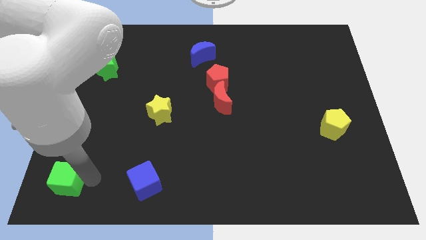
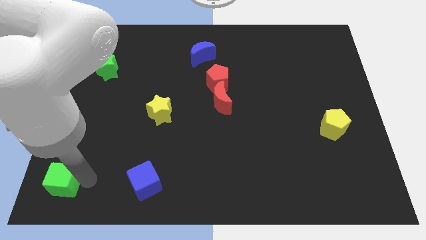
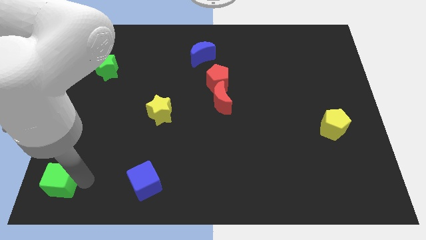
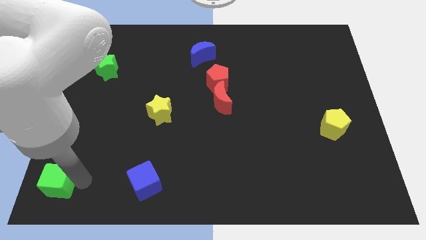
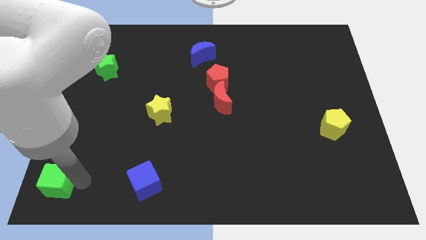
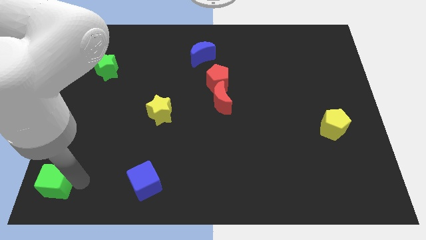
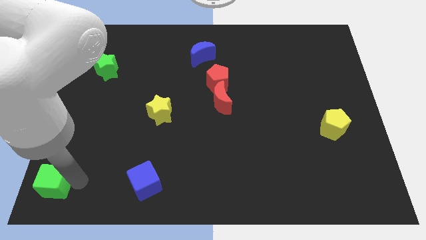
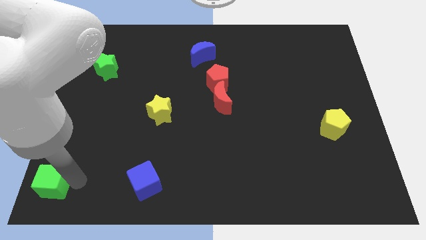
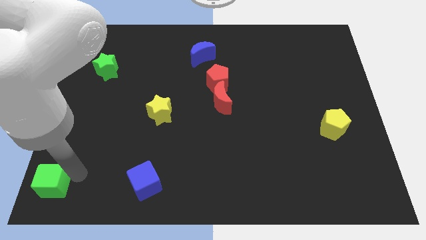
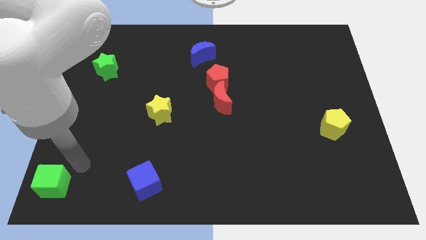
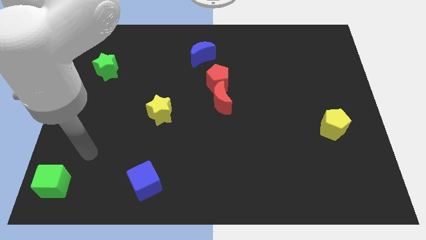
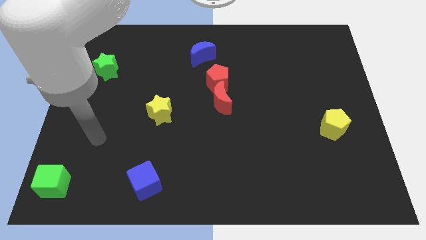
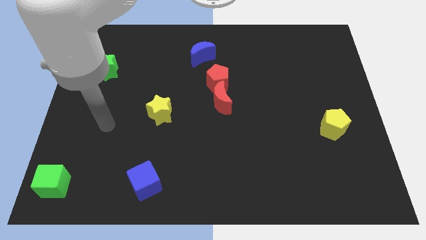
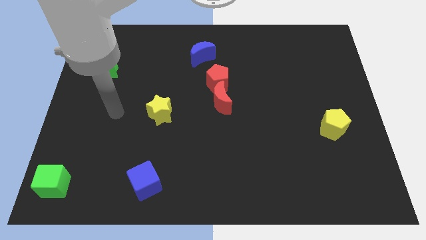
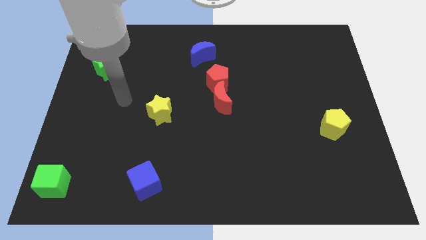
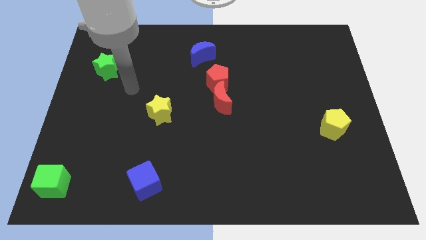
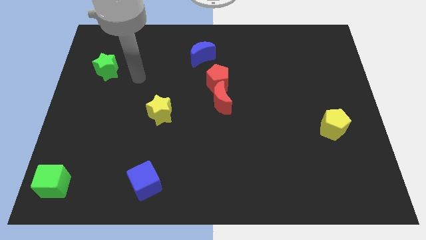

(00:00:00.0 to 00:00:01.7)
push the green cube to the bottom left of the board

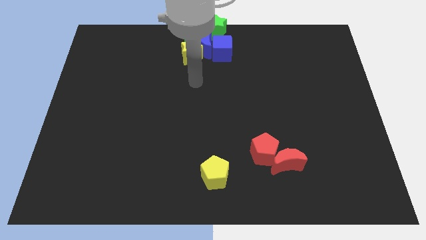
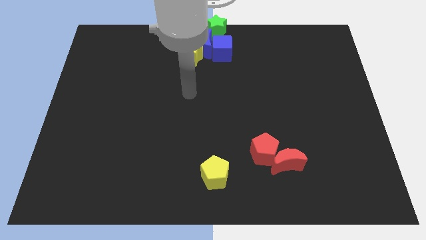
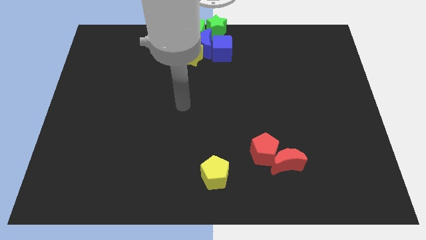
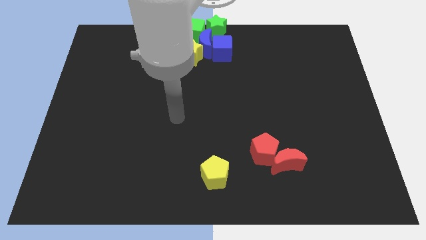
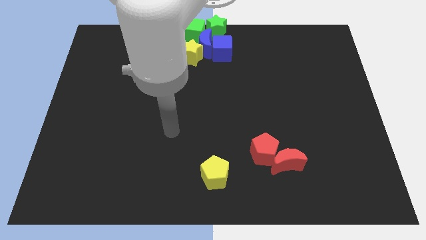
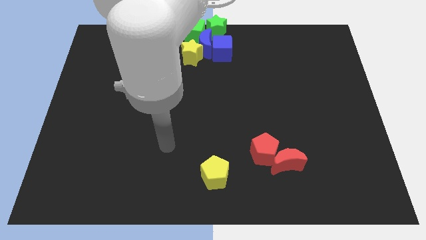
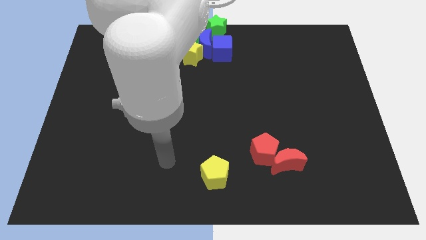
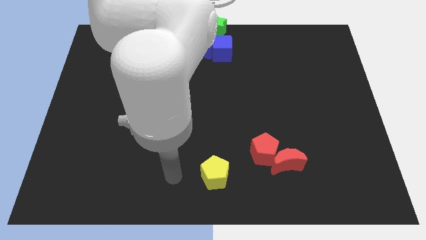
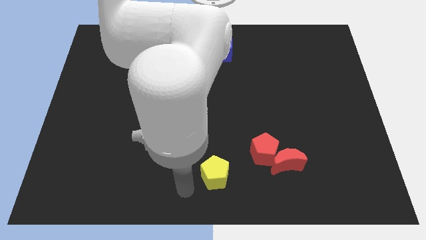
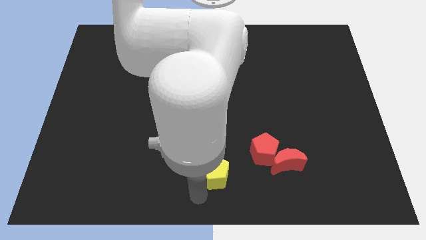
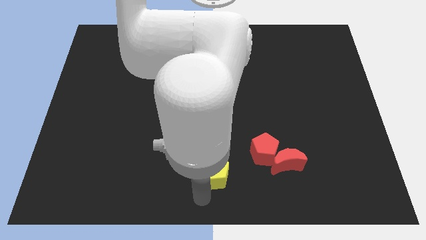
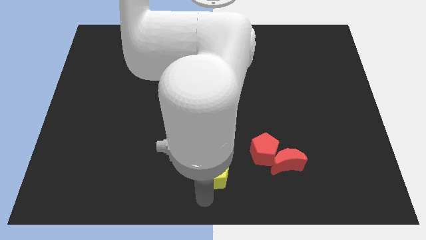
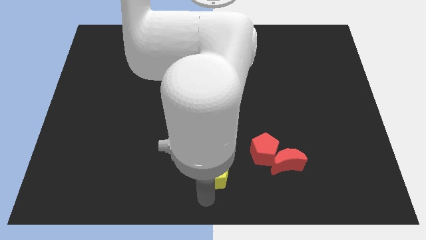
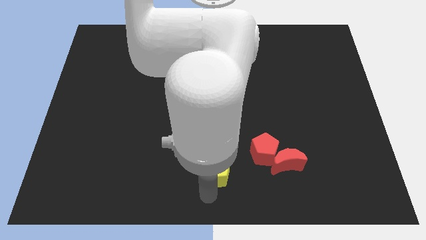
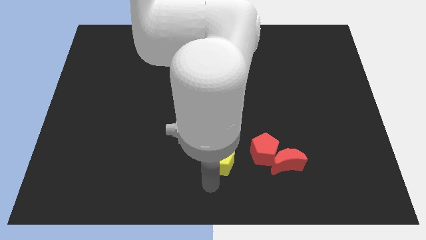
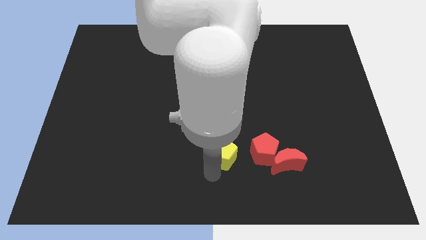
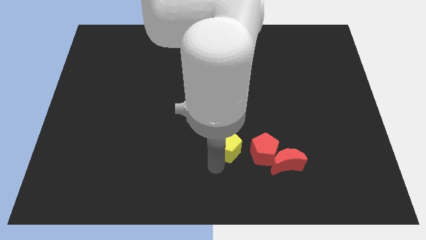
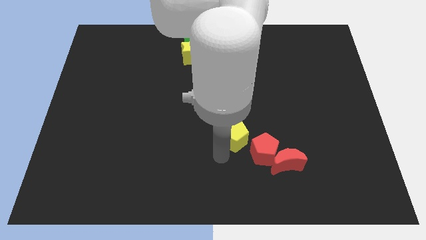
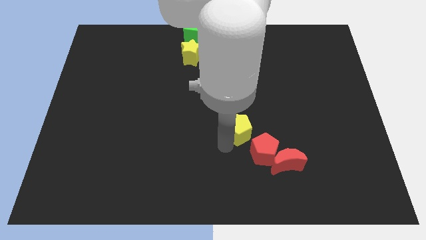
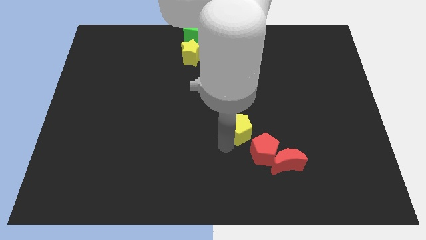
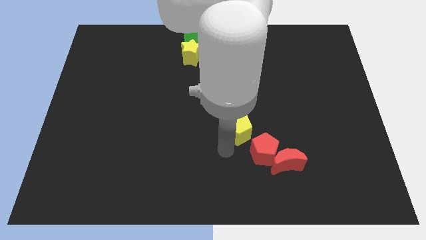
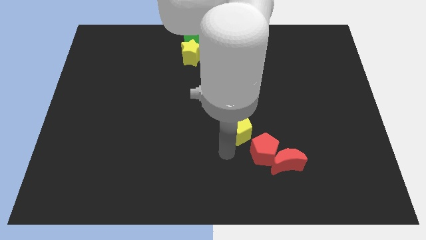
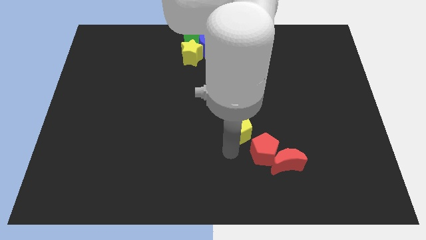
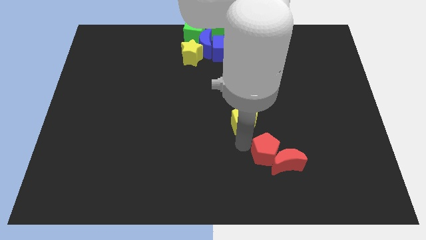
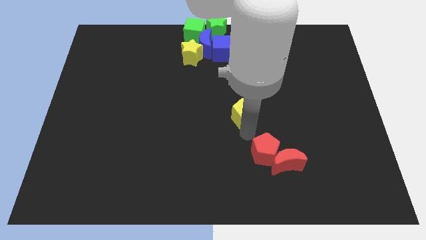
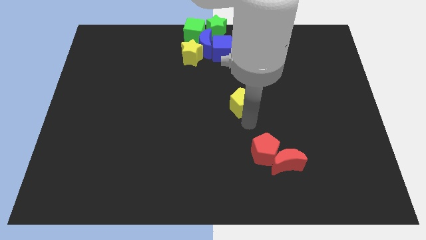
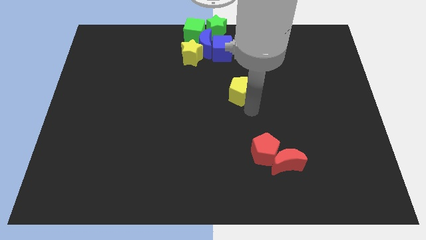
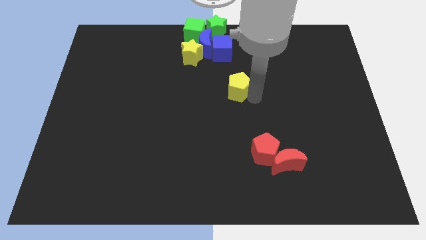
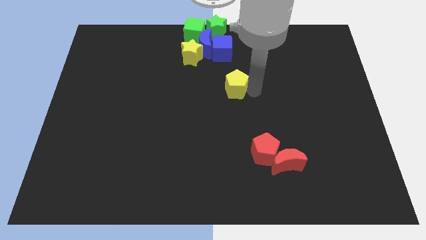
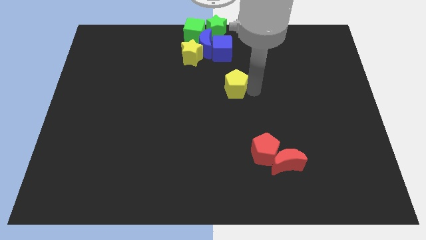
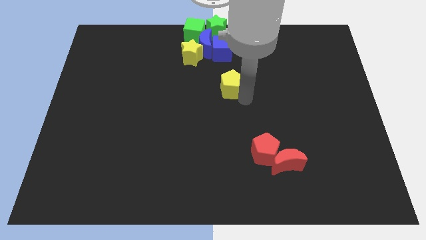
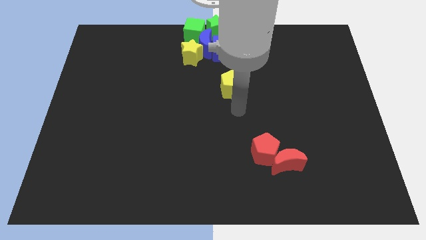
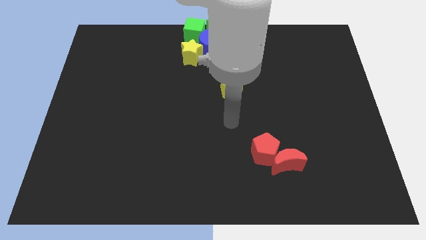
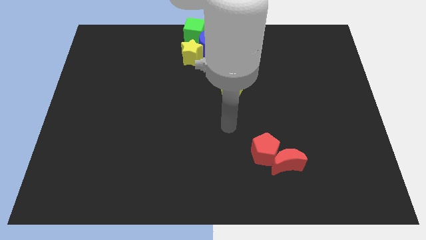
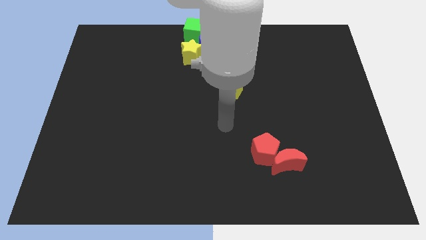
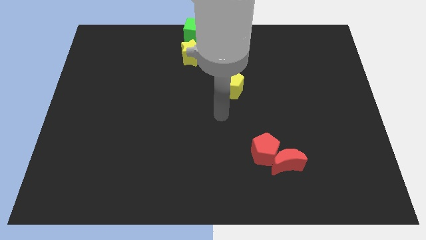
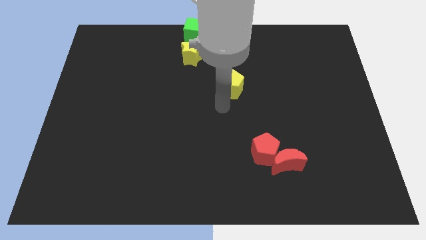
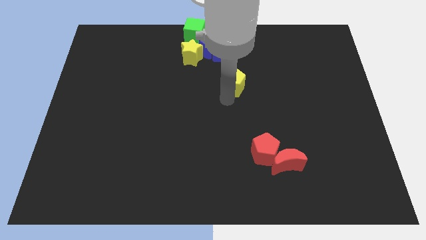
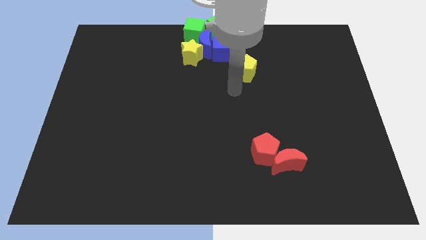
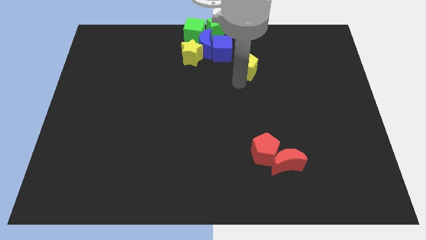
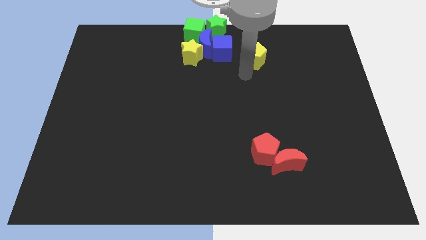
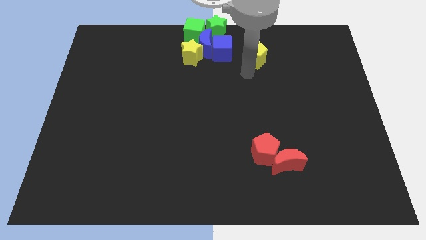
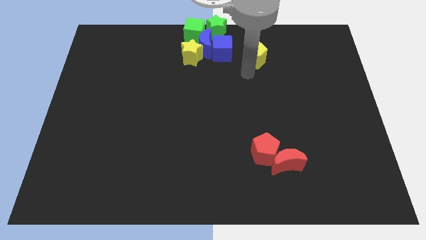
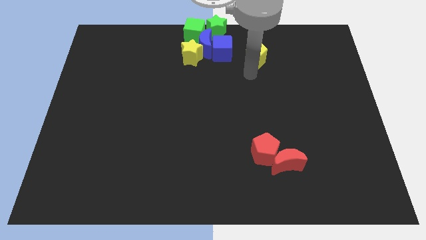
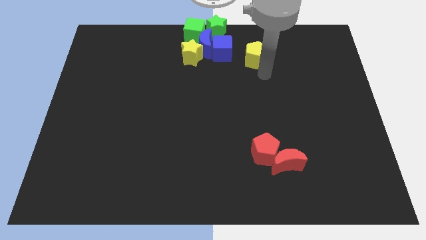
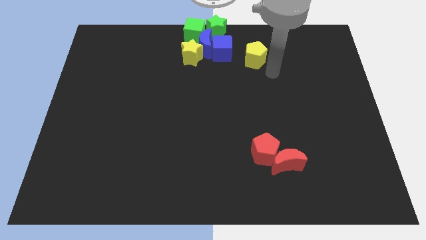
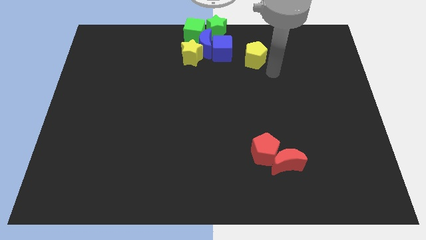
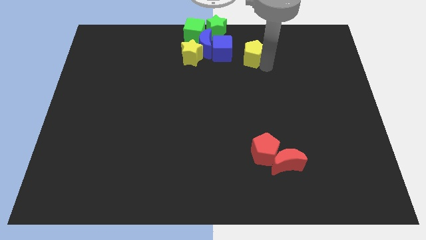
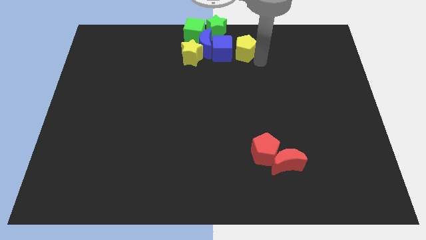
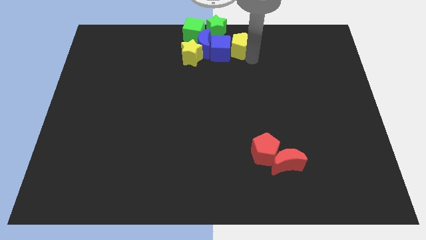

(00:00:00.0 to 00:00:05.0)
push the yellow pentagon to the right of the blue cube

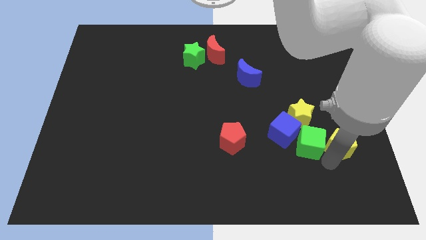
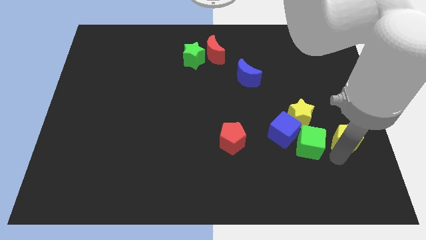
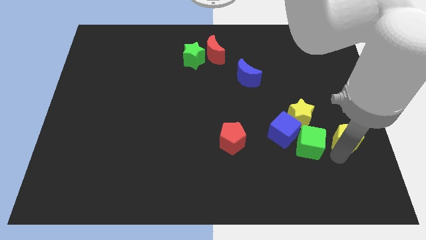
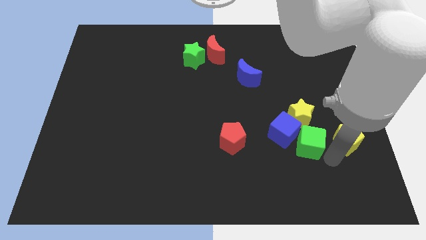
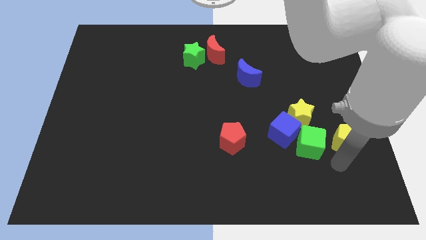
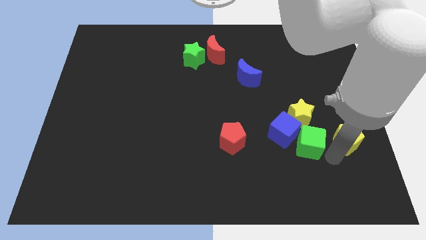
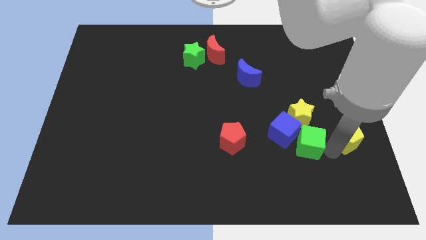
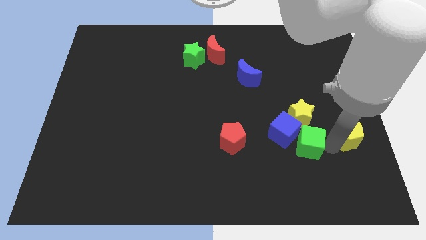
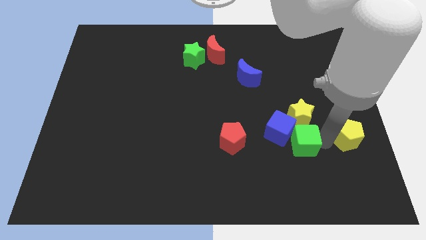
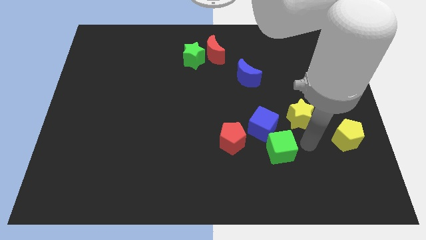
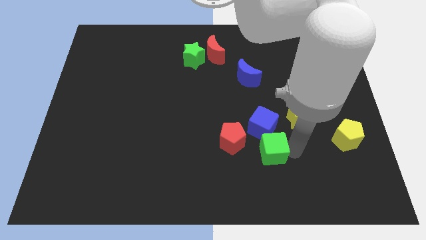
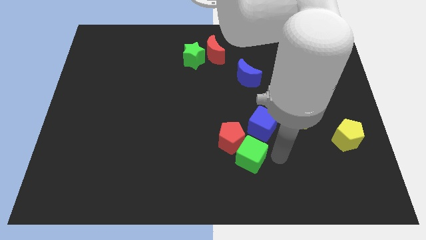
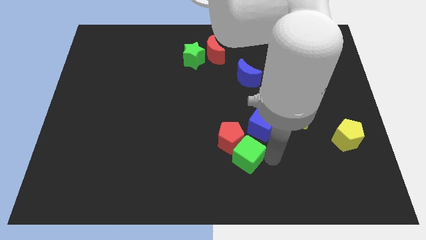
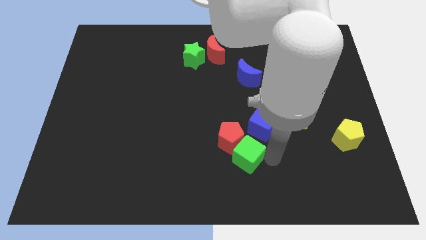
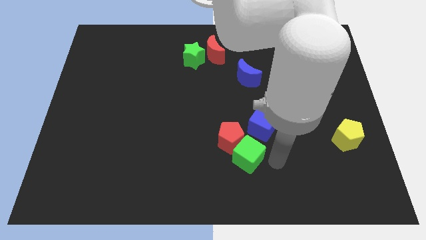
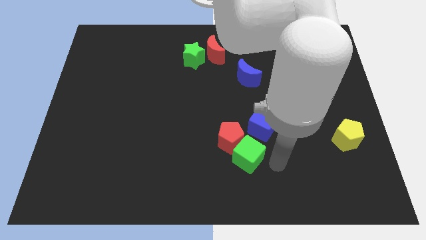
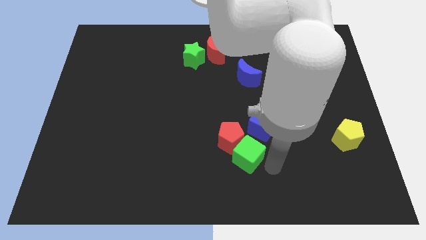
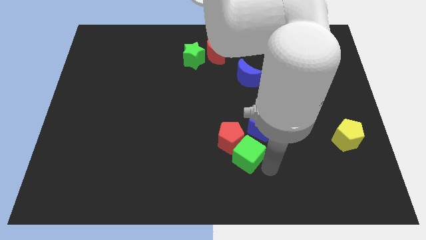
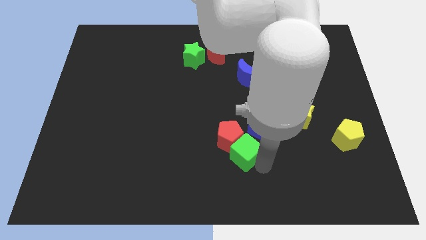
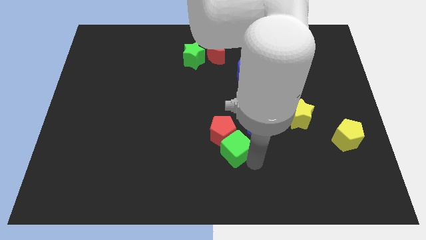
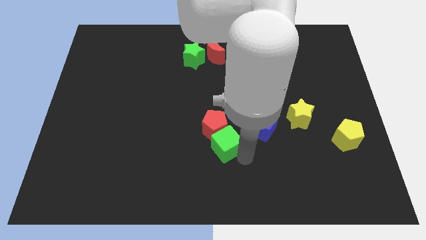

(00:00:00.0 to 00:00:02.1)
push green cube into red pentagon
